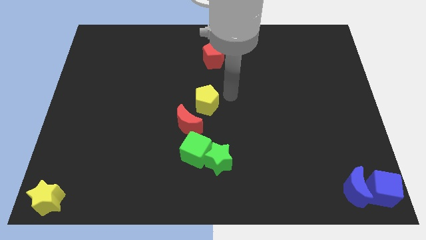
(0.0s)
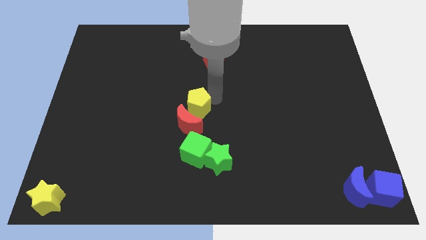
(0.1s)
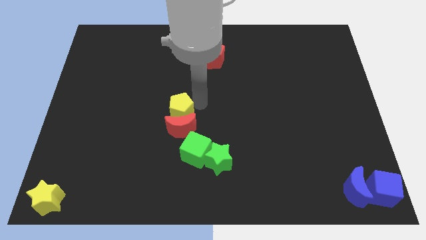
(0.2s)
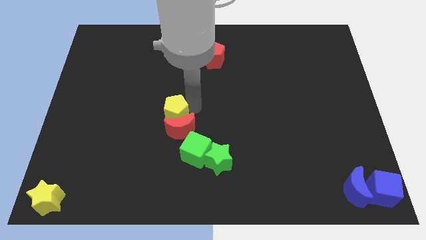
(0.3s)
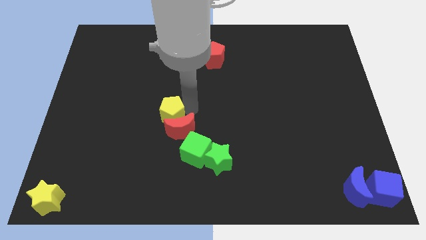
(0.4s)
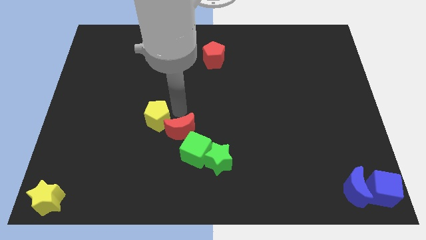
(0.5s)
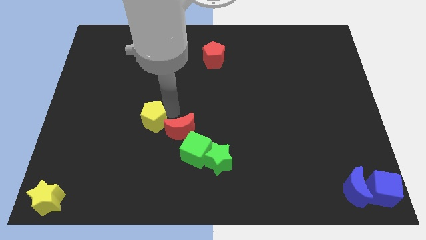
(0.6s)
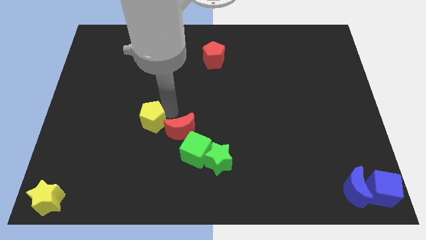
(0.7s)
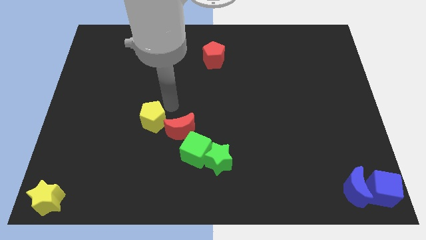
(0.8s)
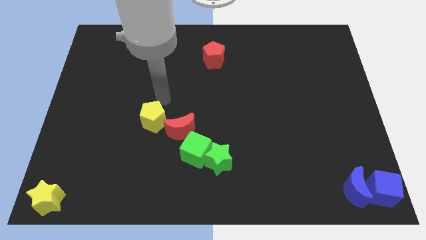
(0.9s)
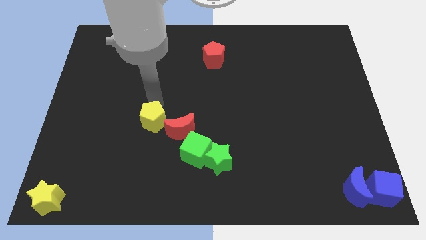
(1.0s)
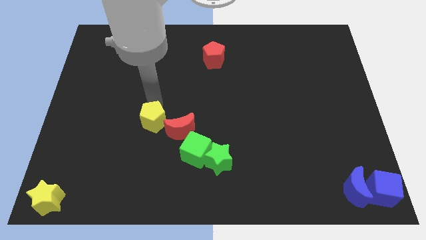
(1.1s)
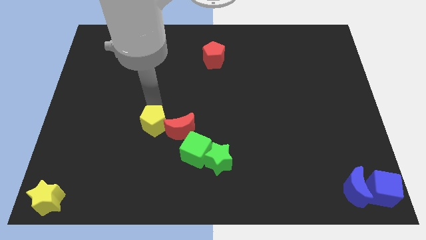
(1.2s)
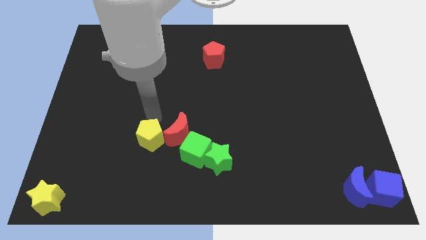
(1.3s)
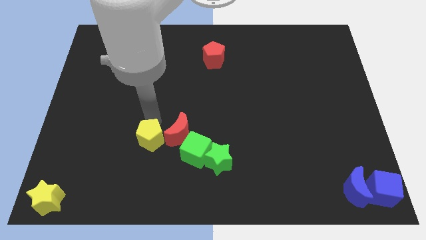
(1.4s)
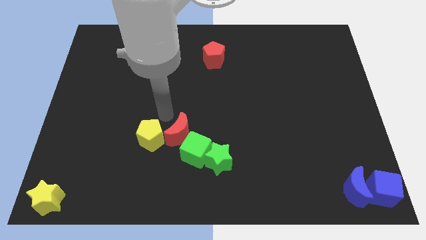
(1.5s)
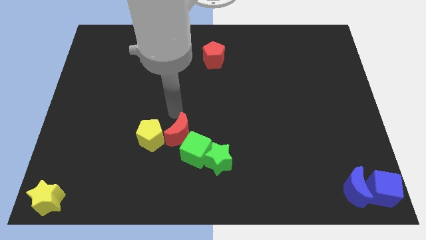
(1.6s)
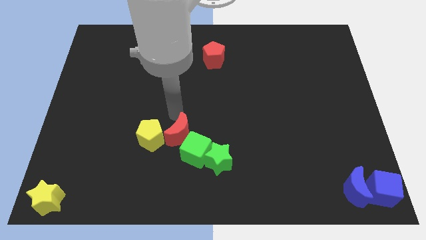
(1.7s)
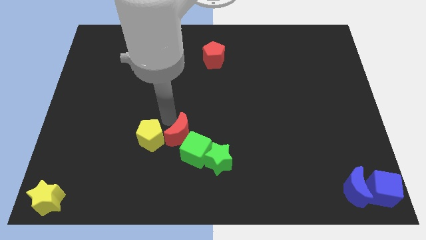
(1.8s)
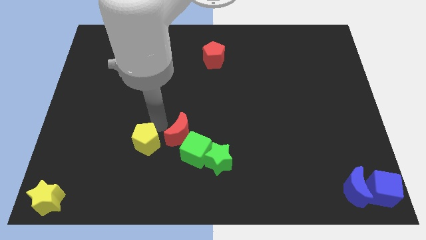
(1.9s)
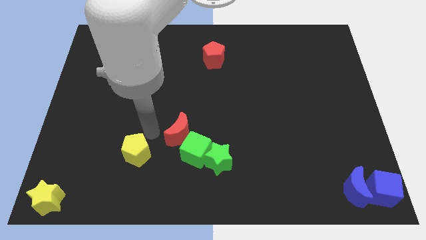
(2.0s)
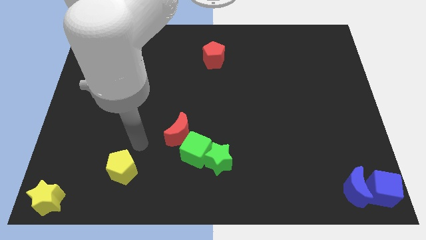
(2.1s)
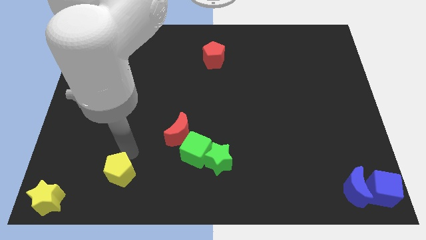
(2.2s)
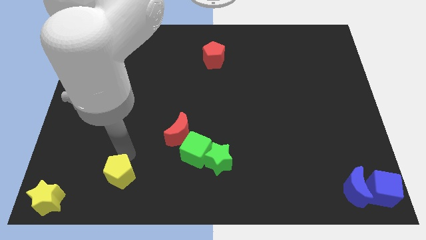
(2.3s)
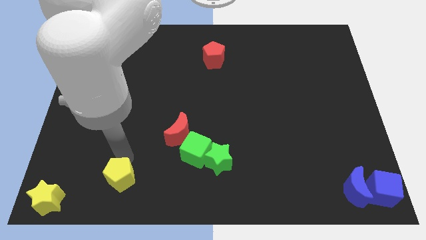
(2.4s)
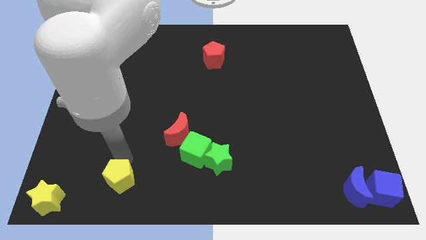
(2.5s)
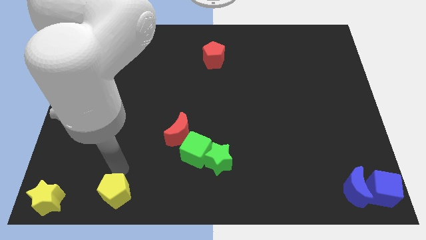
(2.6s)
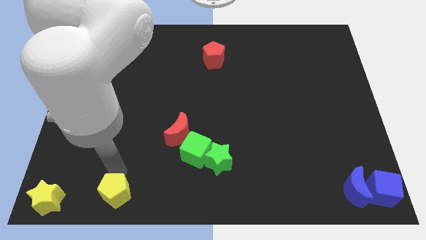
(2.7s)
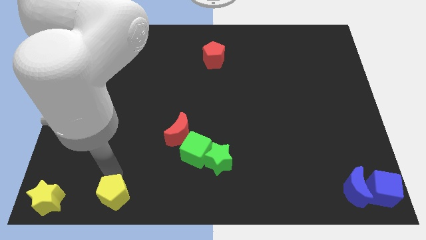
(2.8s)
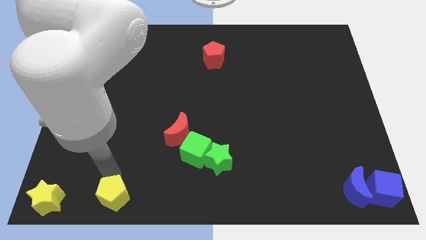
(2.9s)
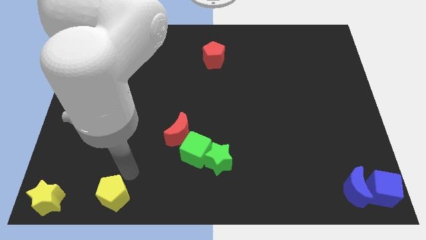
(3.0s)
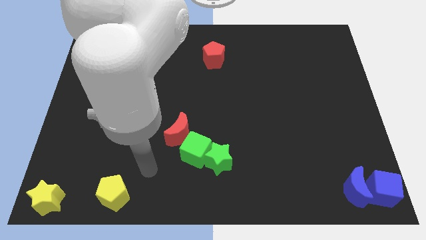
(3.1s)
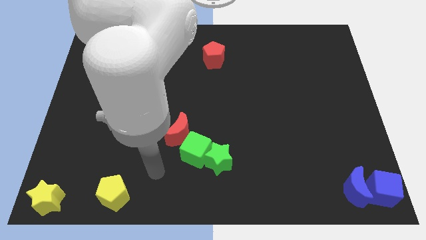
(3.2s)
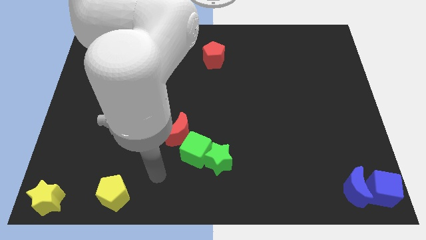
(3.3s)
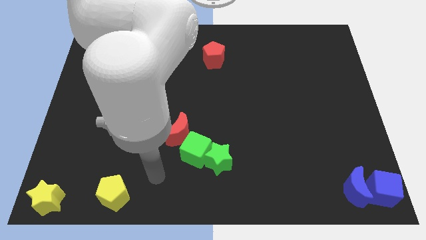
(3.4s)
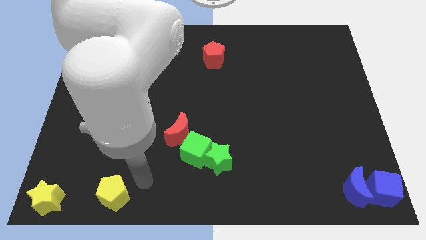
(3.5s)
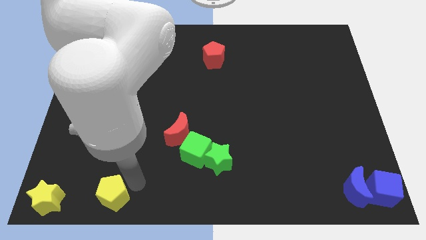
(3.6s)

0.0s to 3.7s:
place yellow pentagon to the right of yellow star

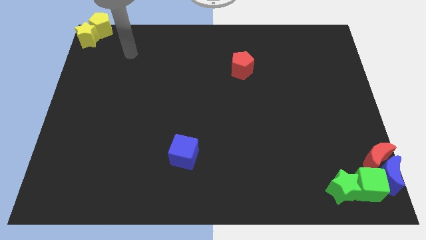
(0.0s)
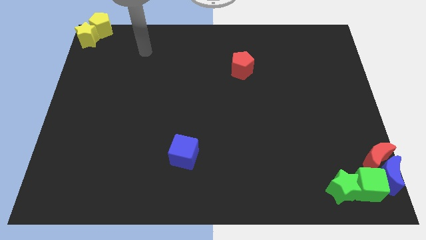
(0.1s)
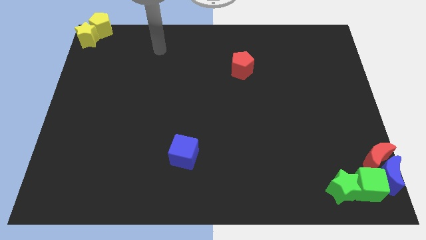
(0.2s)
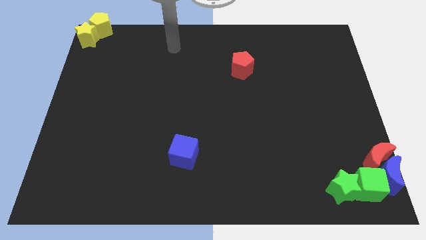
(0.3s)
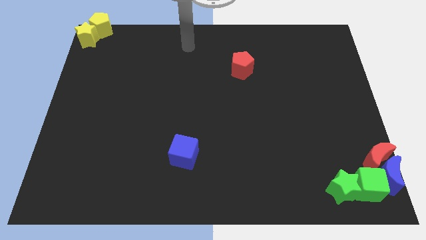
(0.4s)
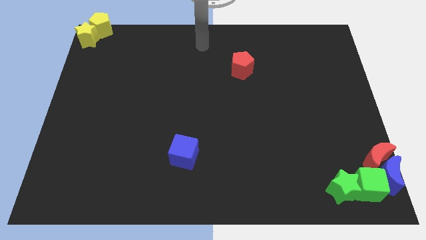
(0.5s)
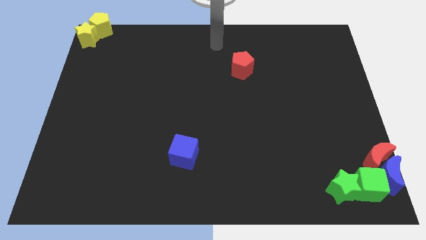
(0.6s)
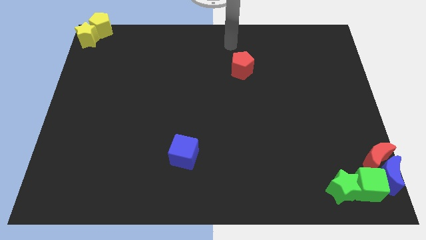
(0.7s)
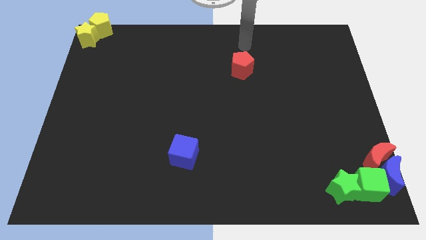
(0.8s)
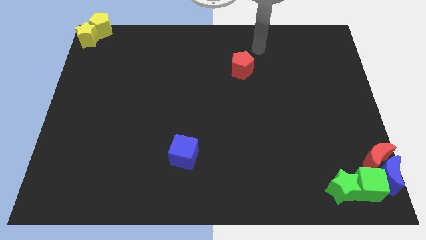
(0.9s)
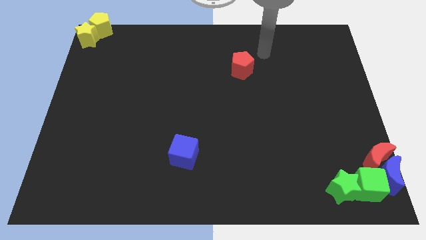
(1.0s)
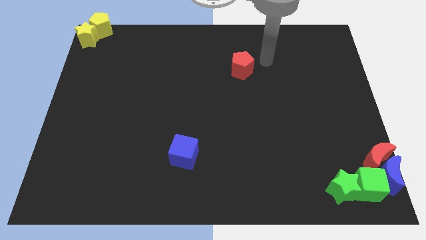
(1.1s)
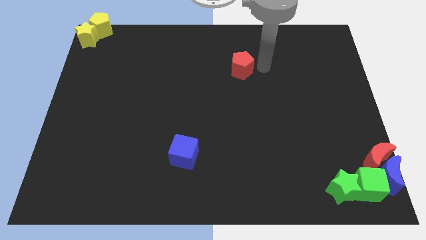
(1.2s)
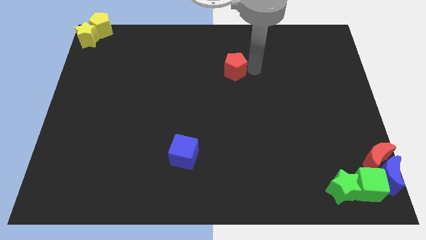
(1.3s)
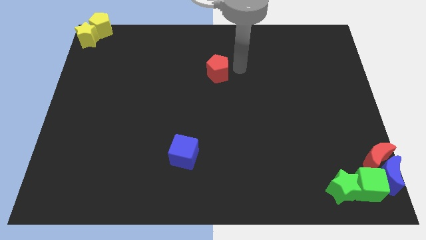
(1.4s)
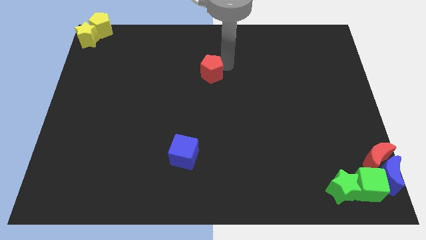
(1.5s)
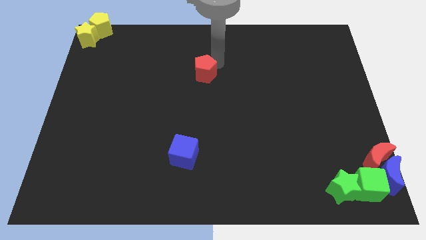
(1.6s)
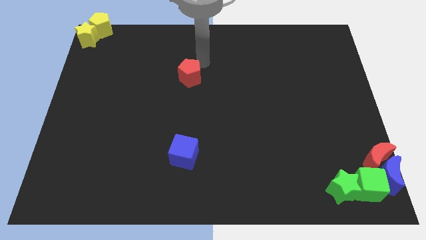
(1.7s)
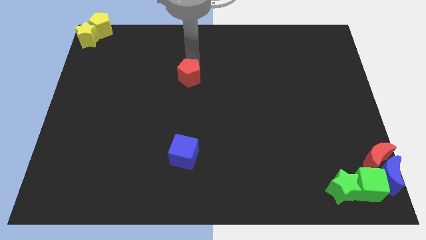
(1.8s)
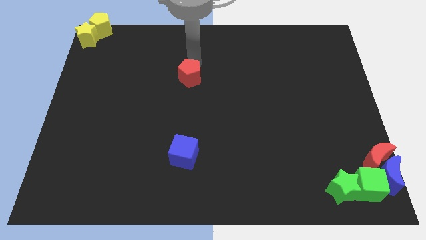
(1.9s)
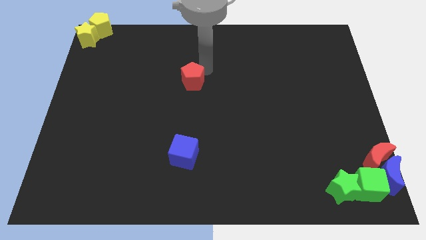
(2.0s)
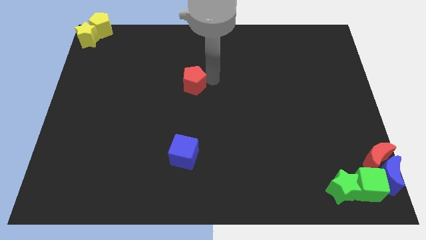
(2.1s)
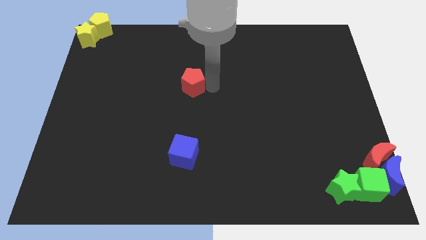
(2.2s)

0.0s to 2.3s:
move the red pentagon above the blue cube

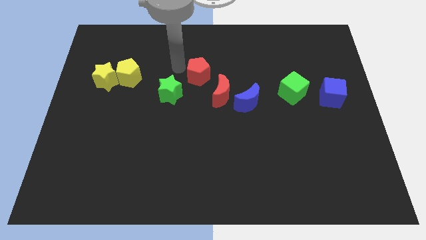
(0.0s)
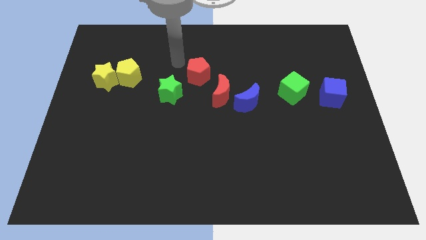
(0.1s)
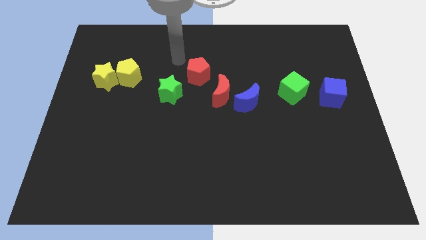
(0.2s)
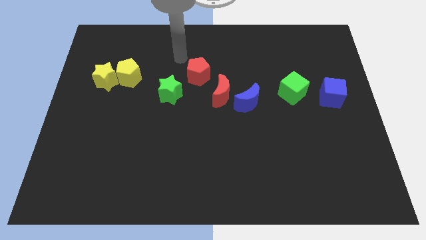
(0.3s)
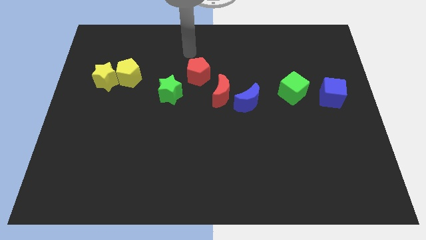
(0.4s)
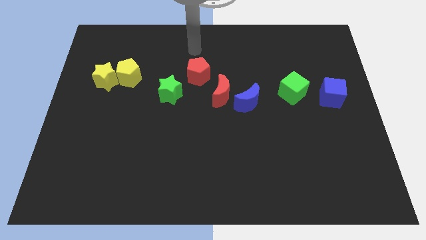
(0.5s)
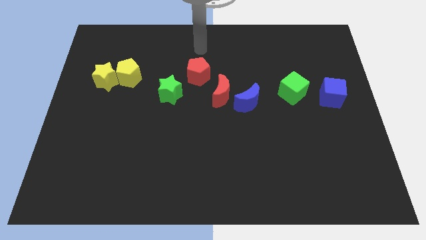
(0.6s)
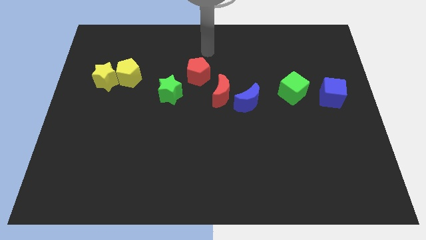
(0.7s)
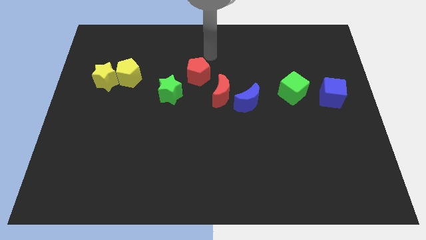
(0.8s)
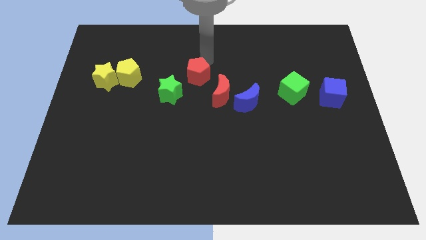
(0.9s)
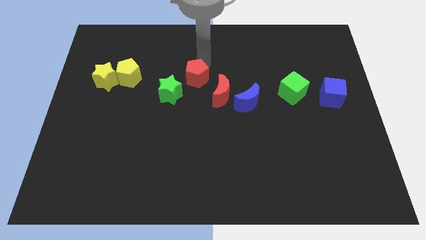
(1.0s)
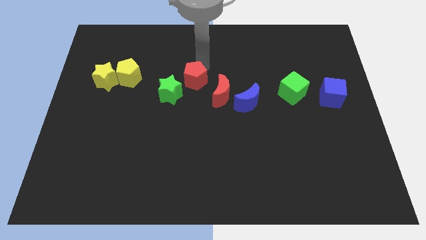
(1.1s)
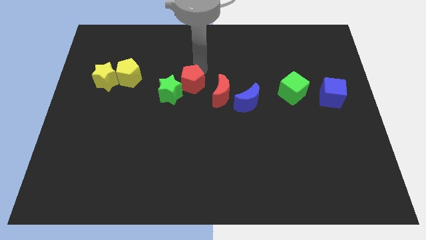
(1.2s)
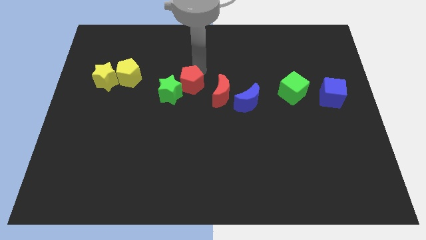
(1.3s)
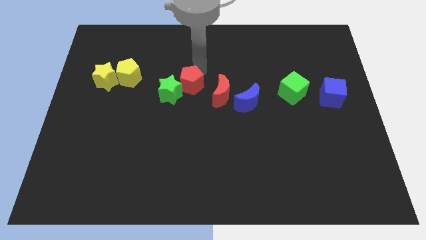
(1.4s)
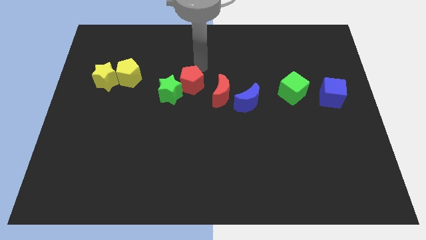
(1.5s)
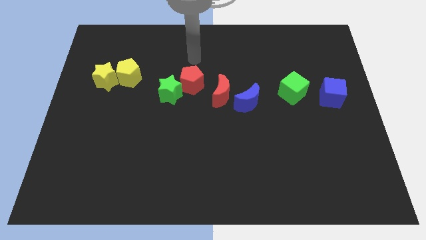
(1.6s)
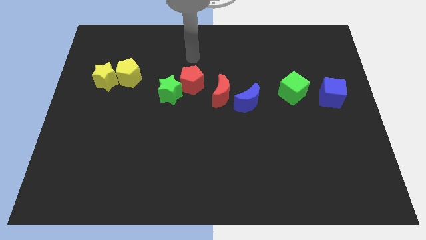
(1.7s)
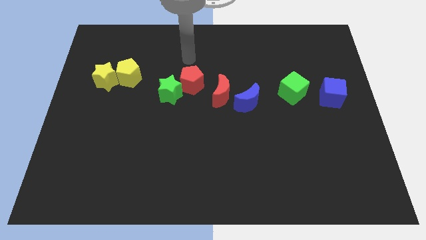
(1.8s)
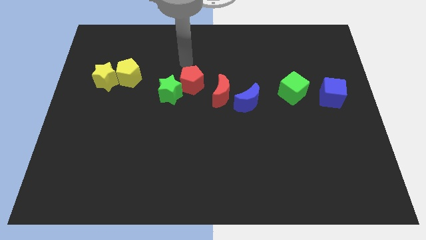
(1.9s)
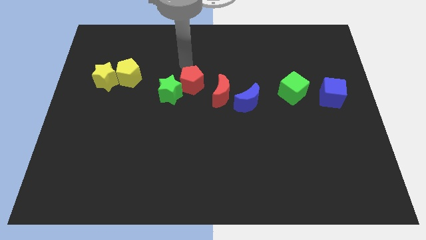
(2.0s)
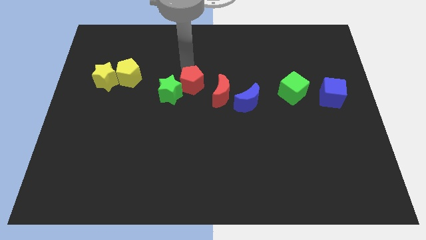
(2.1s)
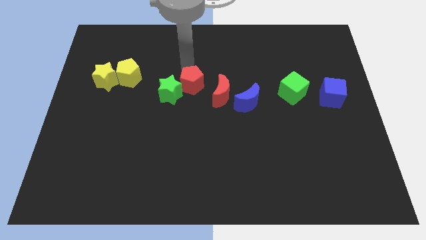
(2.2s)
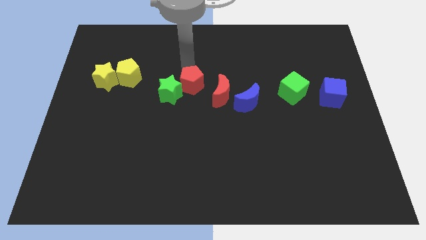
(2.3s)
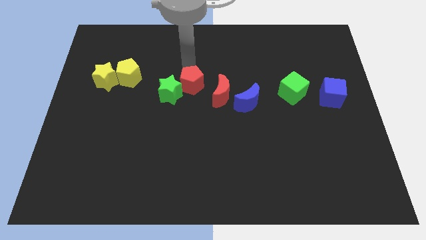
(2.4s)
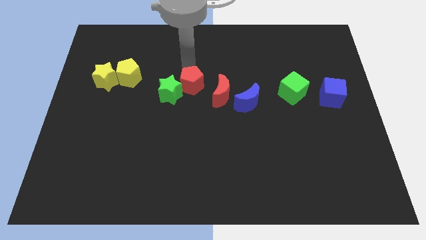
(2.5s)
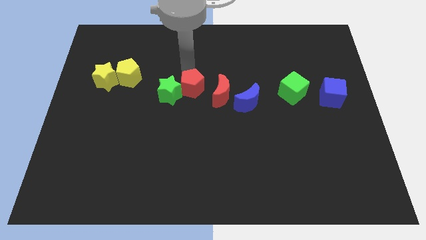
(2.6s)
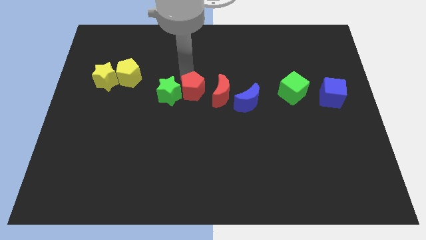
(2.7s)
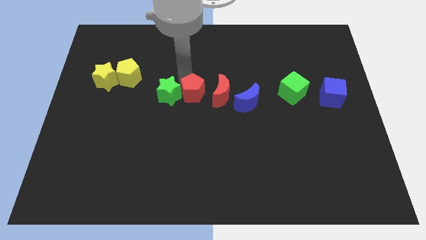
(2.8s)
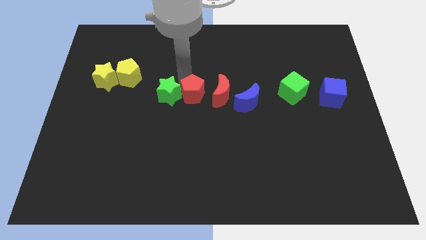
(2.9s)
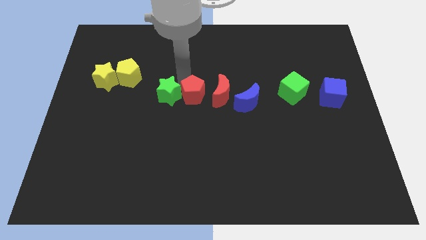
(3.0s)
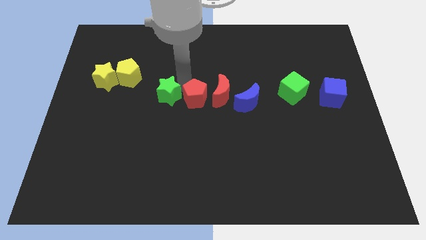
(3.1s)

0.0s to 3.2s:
put the red pentagon in between the red crescent and green star
